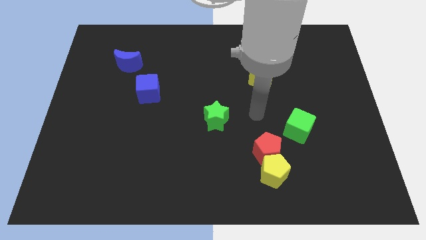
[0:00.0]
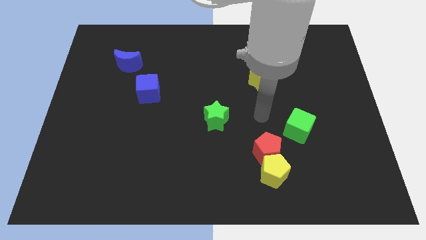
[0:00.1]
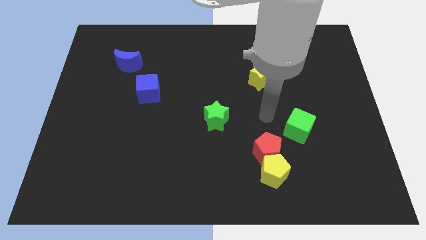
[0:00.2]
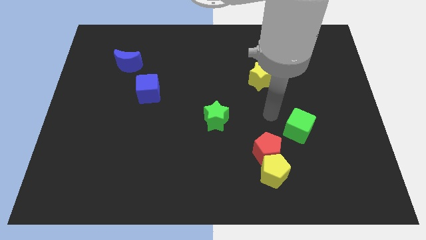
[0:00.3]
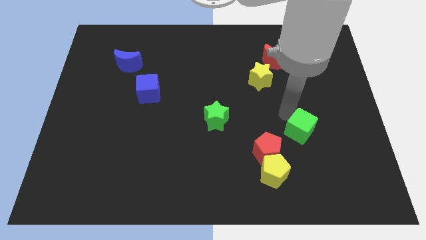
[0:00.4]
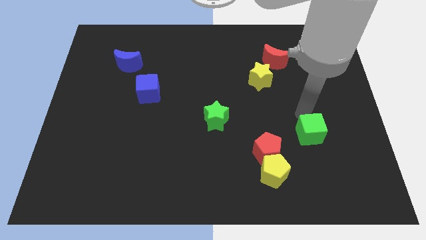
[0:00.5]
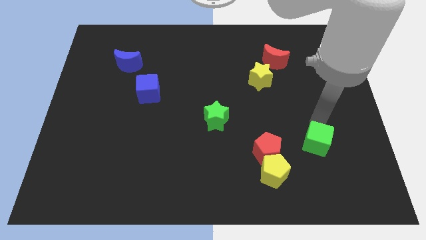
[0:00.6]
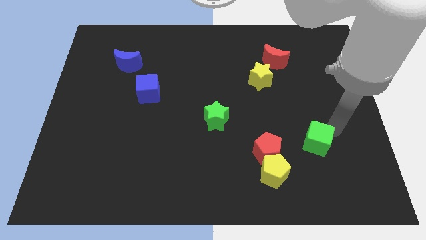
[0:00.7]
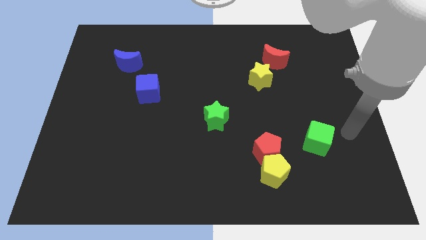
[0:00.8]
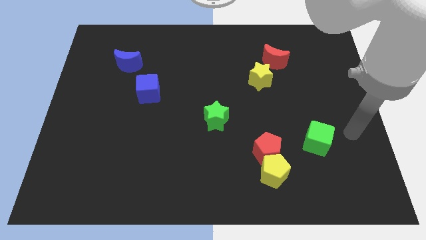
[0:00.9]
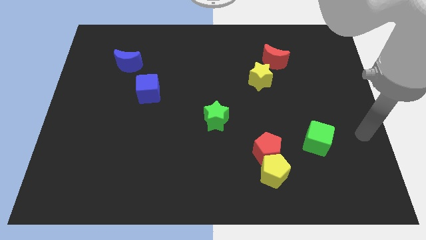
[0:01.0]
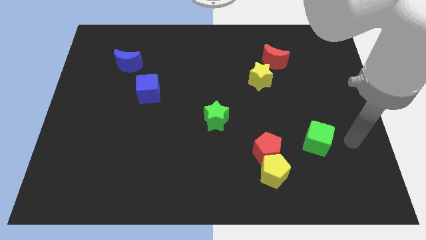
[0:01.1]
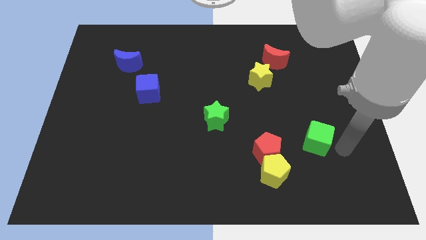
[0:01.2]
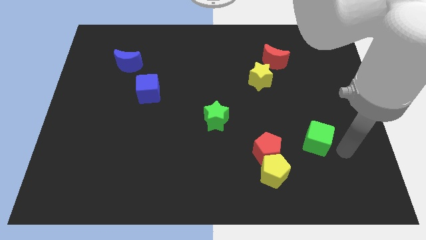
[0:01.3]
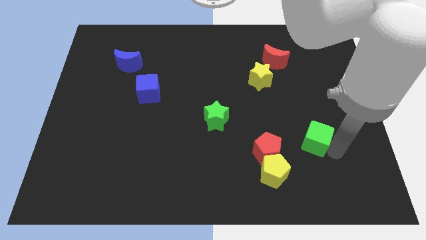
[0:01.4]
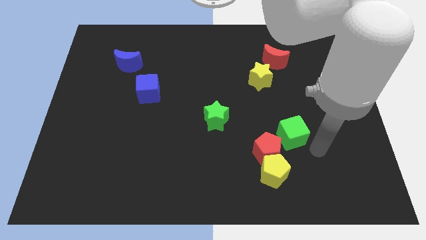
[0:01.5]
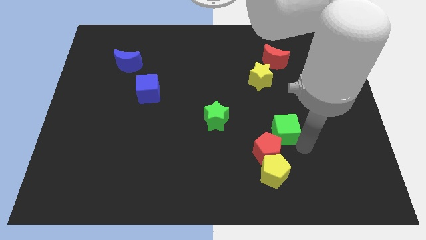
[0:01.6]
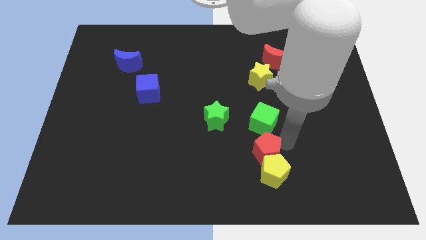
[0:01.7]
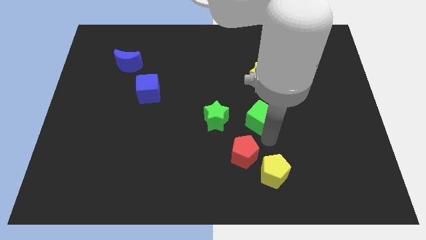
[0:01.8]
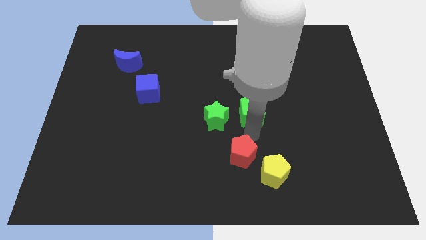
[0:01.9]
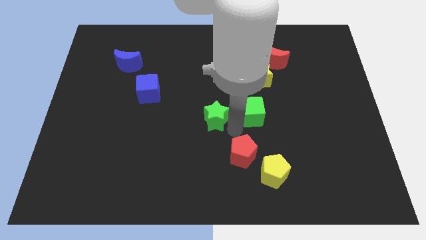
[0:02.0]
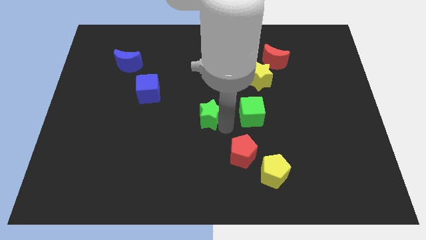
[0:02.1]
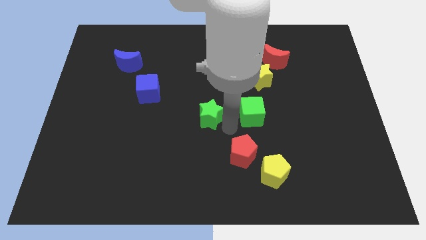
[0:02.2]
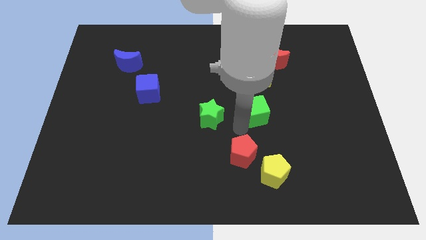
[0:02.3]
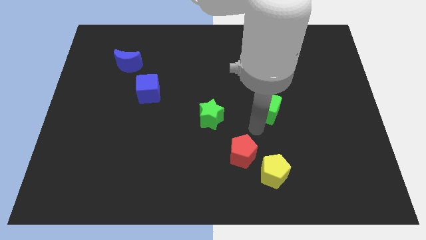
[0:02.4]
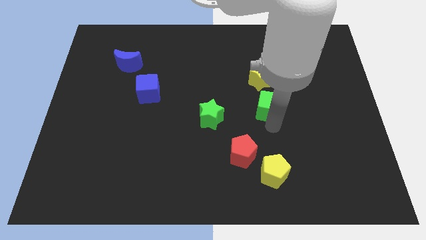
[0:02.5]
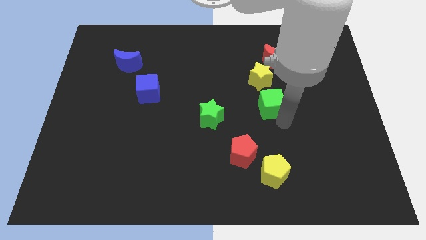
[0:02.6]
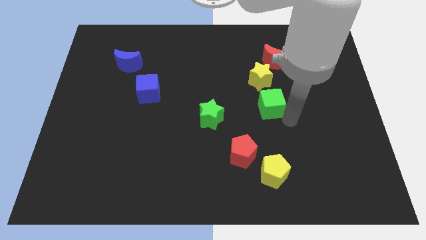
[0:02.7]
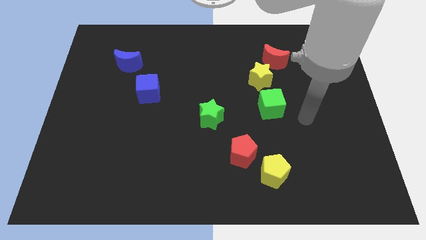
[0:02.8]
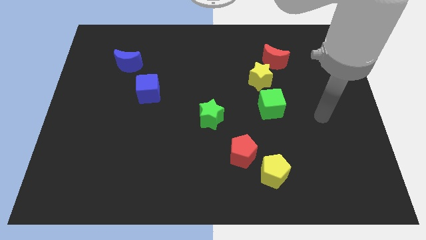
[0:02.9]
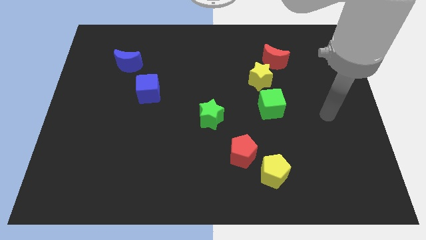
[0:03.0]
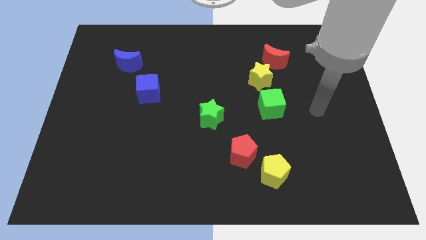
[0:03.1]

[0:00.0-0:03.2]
put the green cube at the bottom of the yellow star

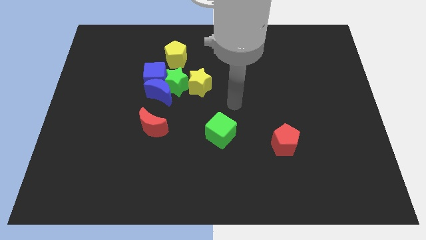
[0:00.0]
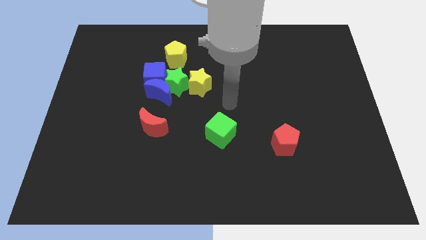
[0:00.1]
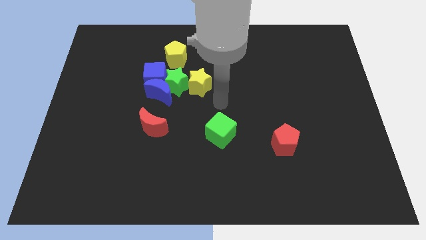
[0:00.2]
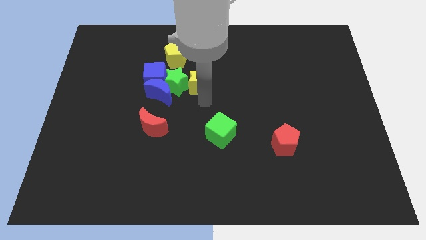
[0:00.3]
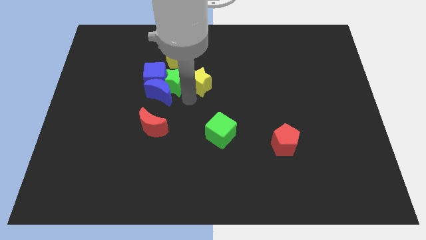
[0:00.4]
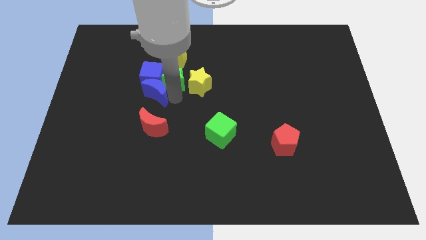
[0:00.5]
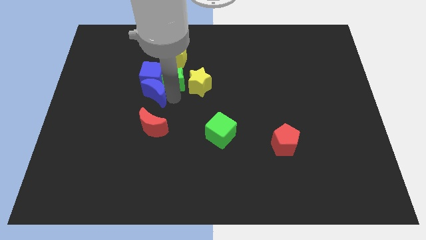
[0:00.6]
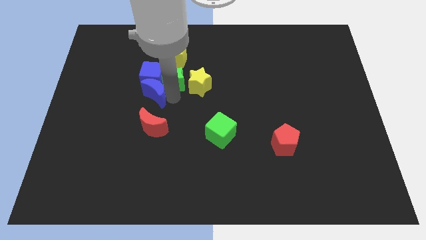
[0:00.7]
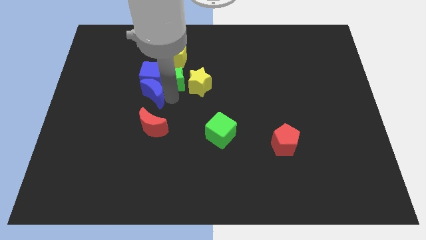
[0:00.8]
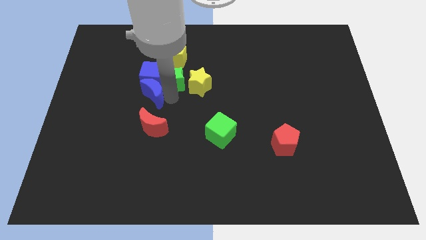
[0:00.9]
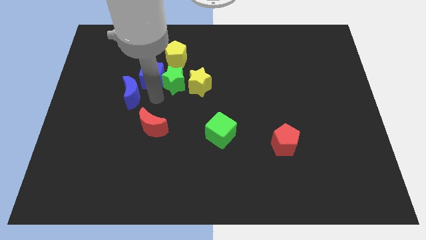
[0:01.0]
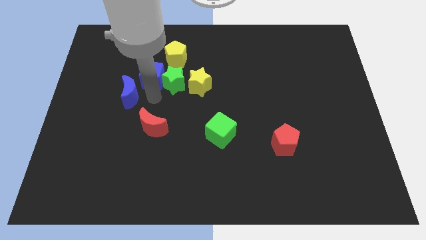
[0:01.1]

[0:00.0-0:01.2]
slide the blue moon slightly to the left

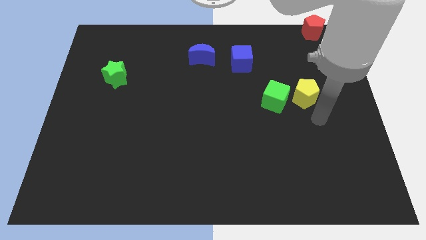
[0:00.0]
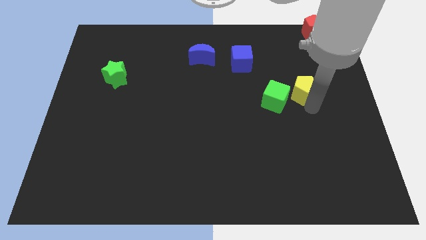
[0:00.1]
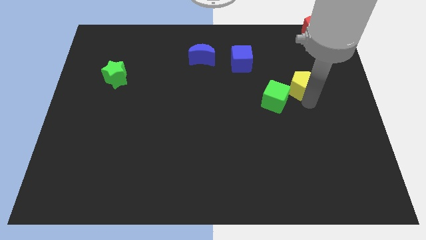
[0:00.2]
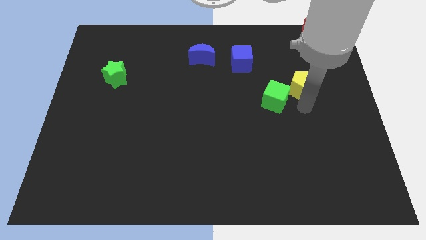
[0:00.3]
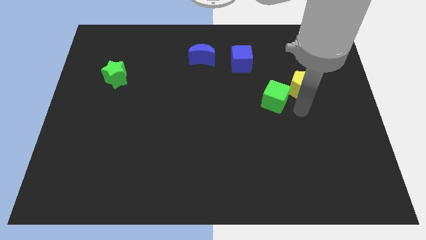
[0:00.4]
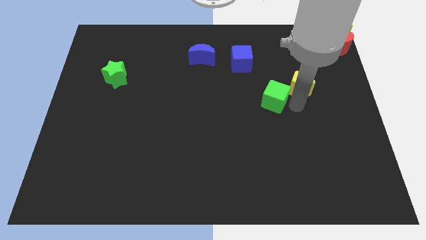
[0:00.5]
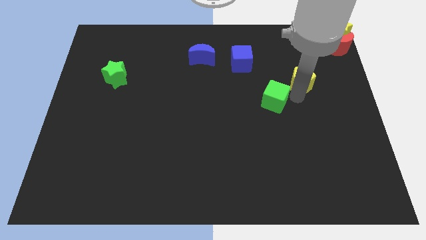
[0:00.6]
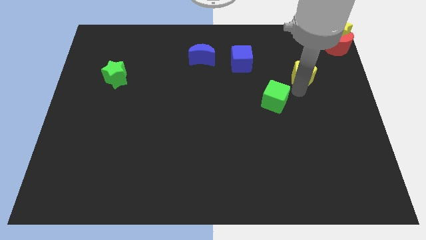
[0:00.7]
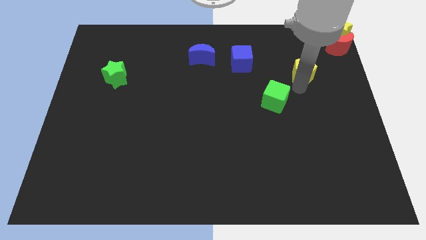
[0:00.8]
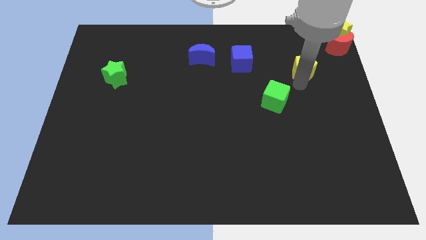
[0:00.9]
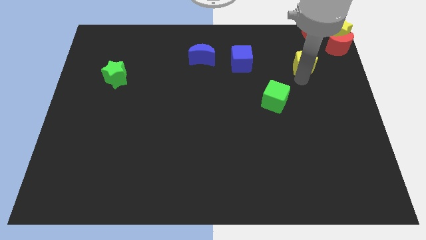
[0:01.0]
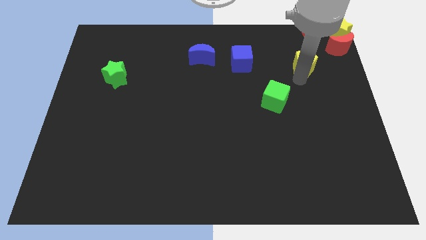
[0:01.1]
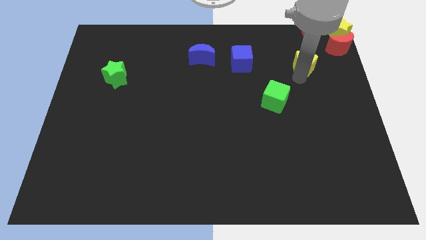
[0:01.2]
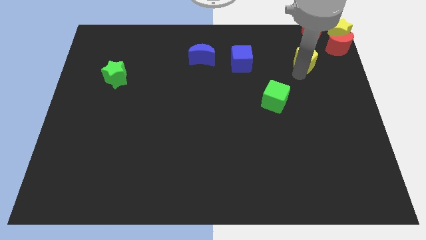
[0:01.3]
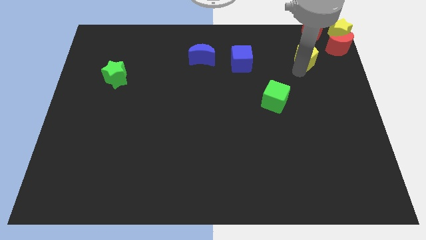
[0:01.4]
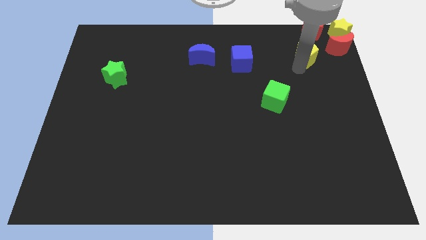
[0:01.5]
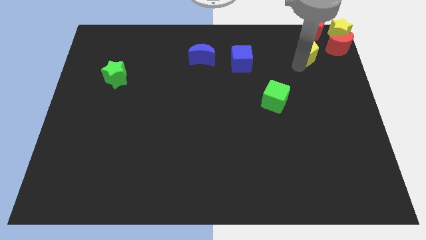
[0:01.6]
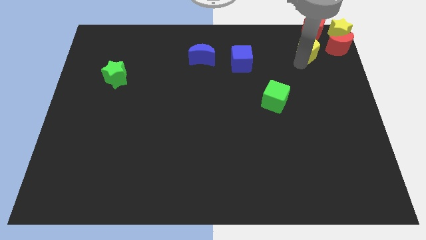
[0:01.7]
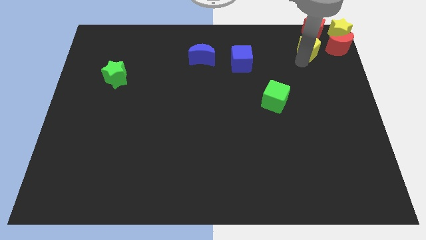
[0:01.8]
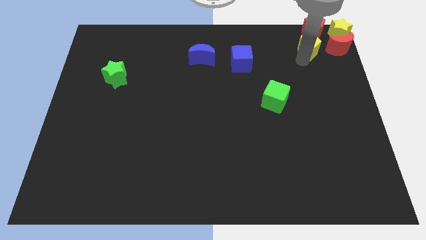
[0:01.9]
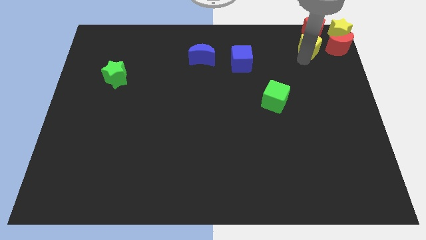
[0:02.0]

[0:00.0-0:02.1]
push yellow pentagon below the red pentagon

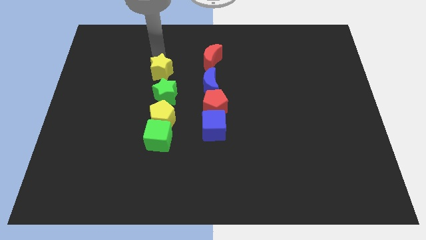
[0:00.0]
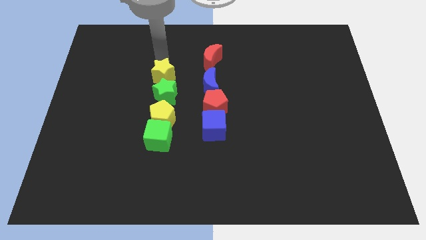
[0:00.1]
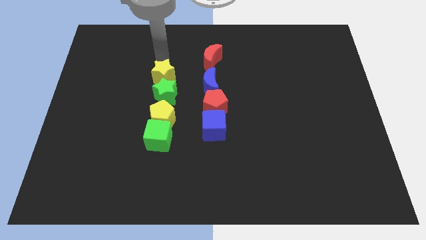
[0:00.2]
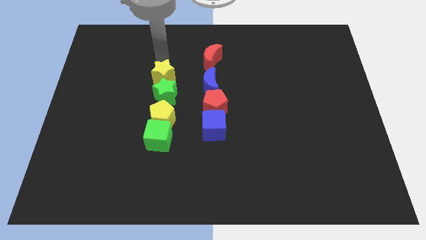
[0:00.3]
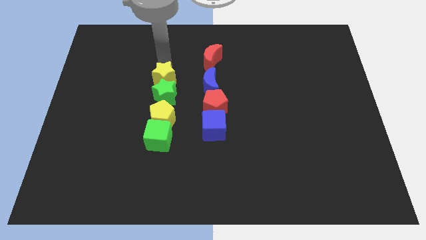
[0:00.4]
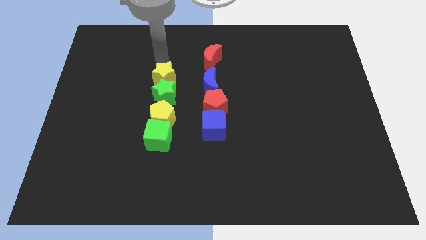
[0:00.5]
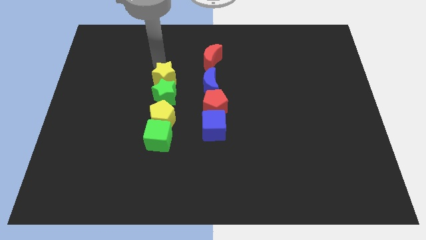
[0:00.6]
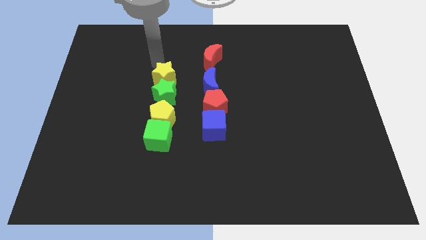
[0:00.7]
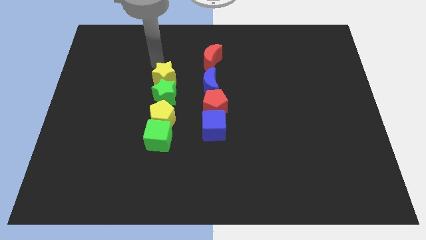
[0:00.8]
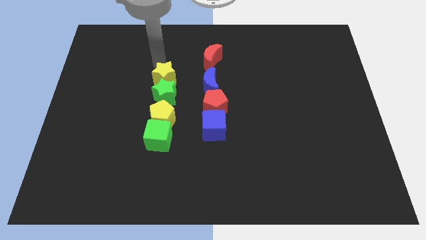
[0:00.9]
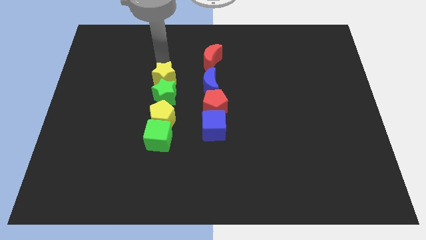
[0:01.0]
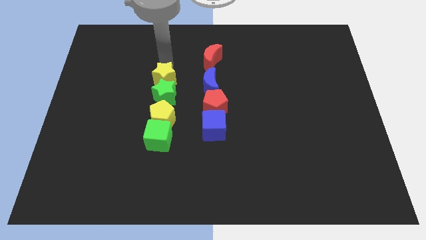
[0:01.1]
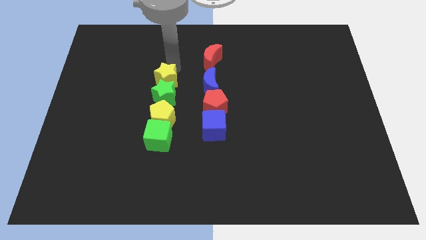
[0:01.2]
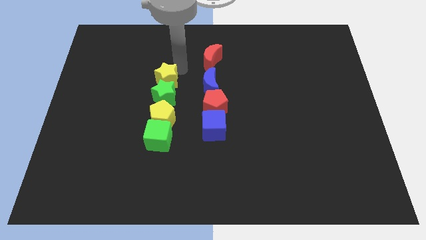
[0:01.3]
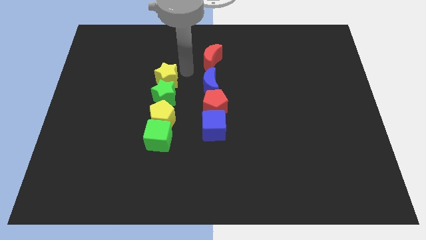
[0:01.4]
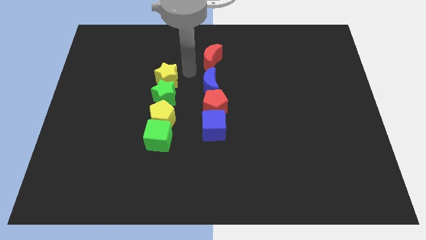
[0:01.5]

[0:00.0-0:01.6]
place the yellow star above the green star

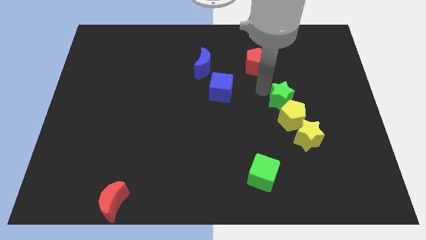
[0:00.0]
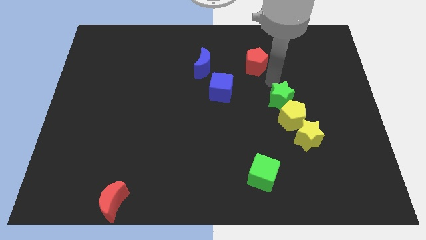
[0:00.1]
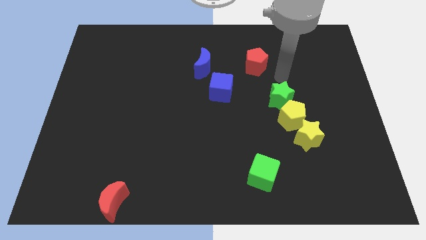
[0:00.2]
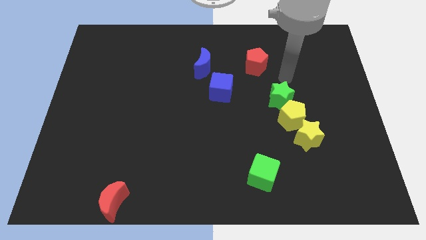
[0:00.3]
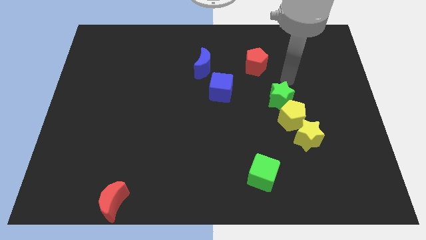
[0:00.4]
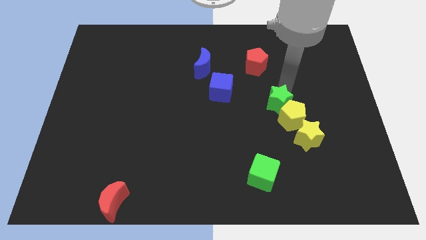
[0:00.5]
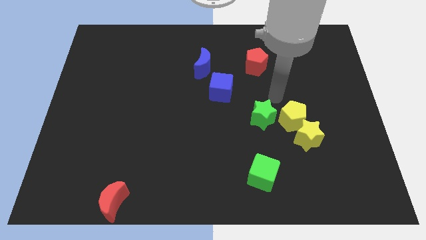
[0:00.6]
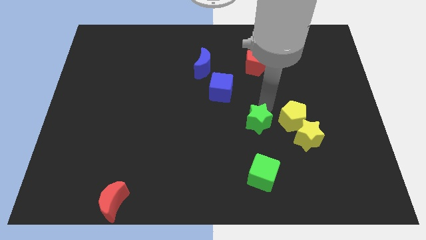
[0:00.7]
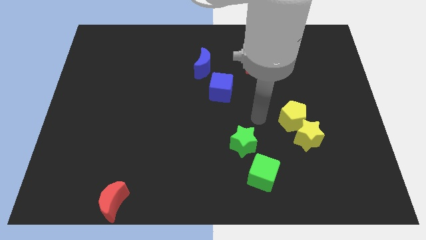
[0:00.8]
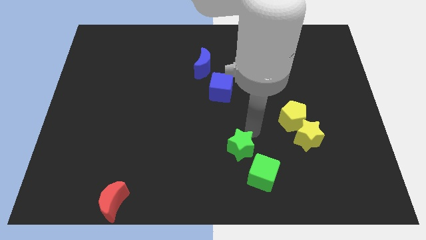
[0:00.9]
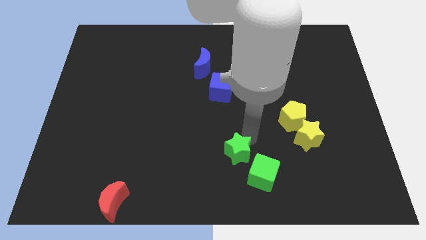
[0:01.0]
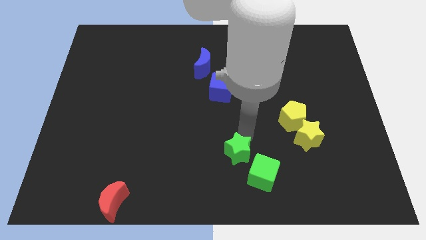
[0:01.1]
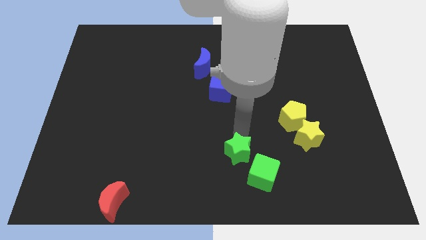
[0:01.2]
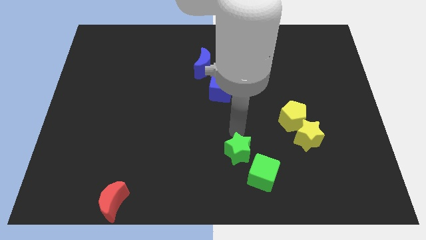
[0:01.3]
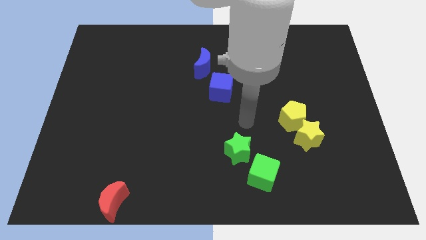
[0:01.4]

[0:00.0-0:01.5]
push the green star towards the green cube
